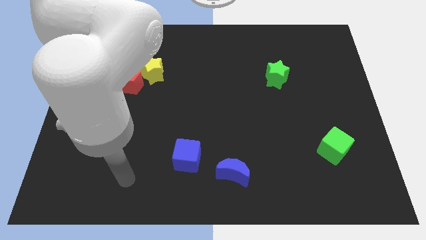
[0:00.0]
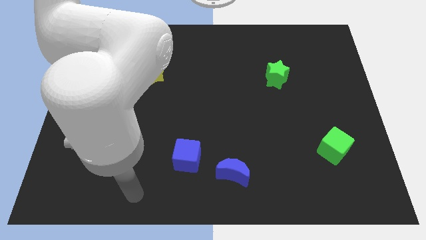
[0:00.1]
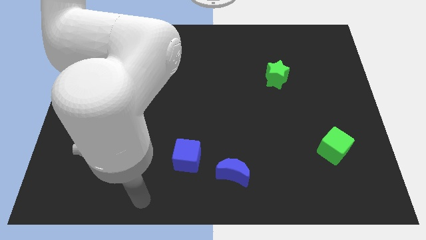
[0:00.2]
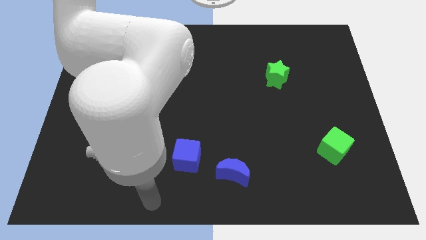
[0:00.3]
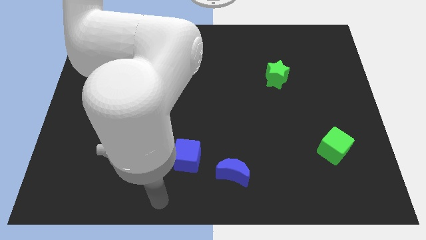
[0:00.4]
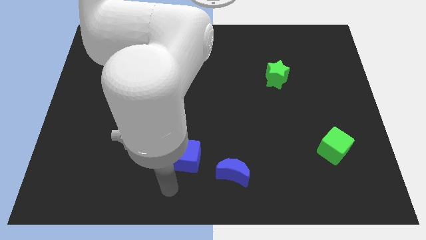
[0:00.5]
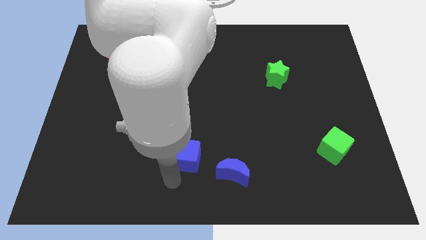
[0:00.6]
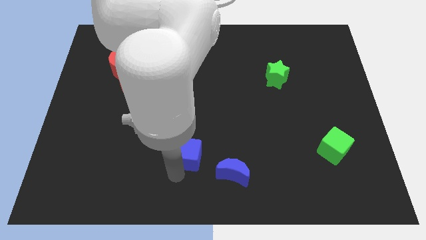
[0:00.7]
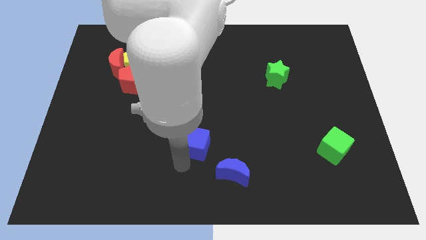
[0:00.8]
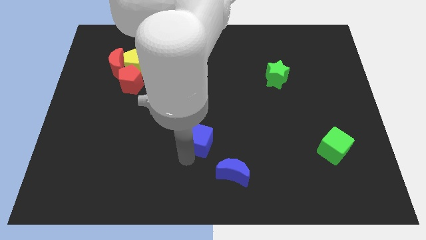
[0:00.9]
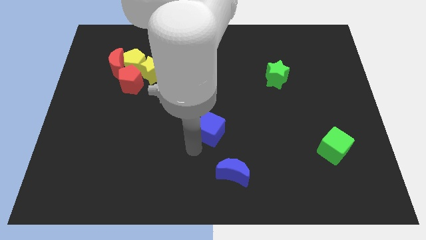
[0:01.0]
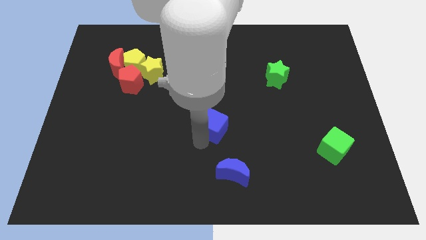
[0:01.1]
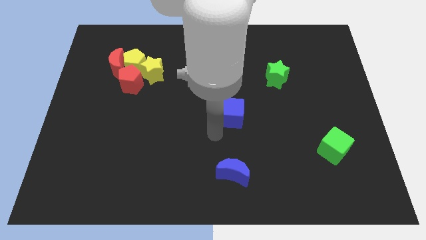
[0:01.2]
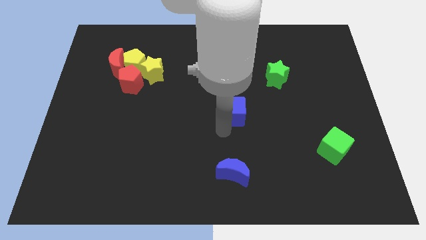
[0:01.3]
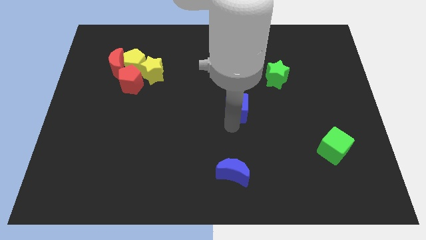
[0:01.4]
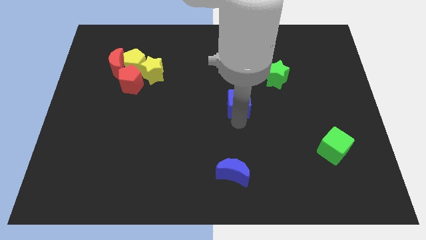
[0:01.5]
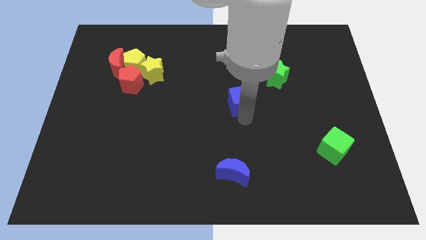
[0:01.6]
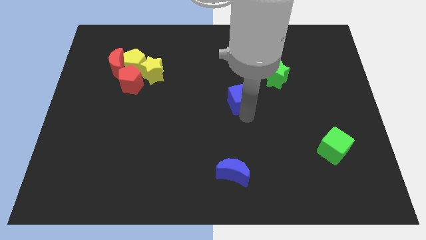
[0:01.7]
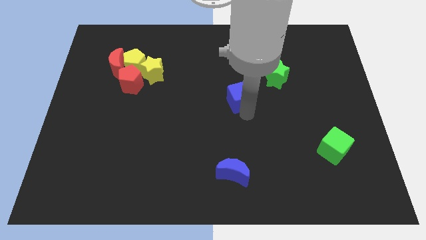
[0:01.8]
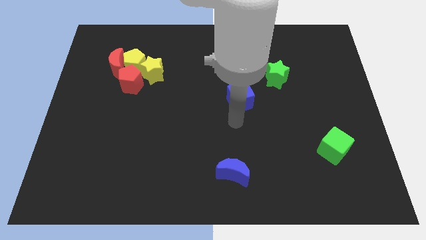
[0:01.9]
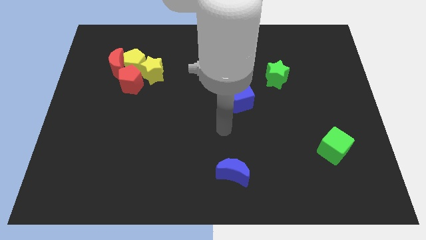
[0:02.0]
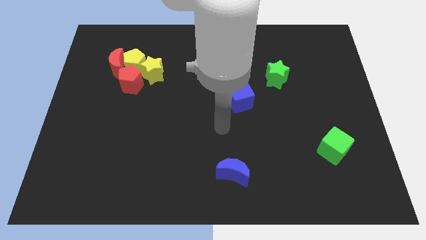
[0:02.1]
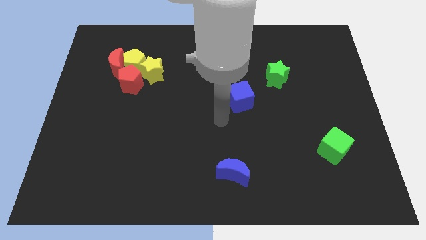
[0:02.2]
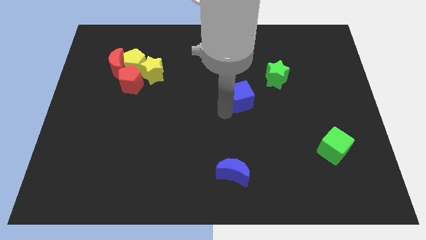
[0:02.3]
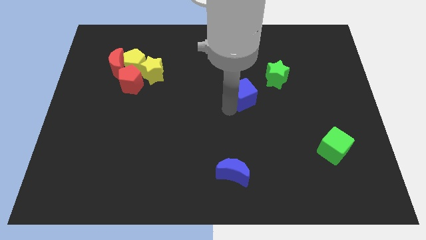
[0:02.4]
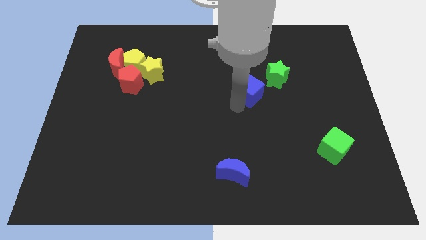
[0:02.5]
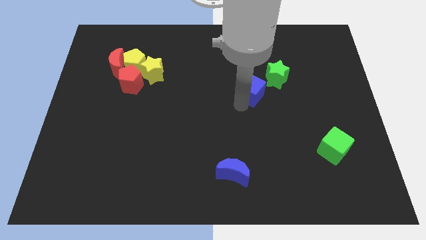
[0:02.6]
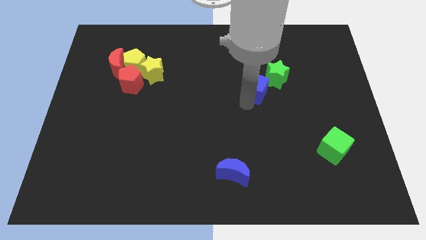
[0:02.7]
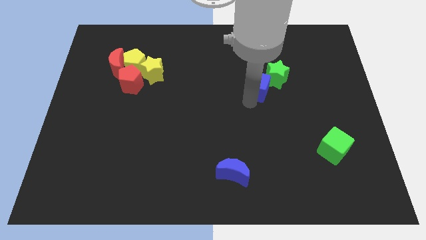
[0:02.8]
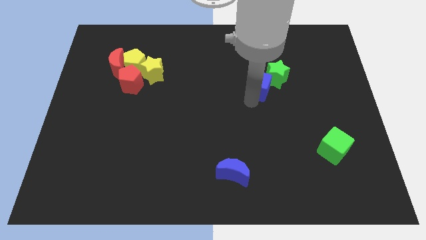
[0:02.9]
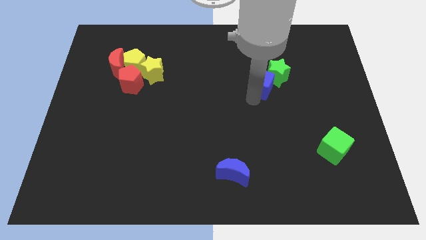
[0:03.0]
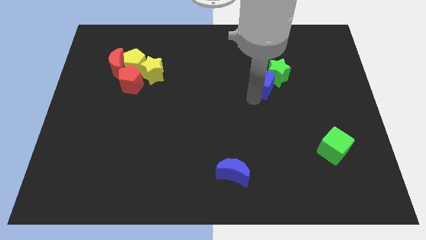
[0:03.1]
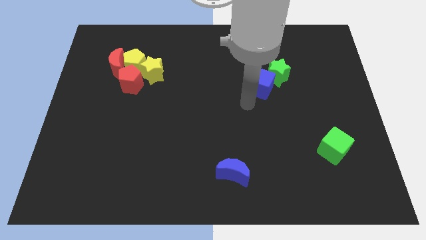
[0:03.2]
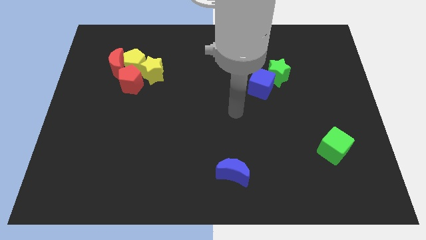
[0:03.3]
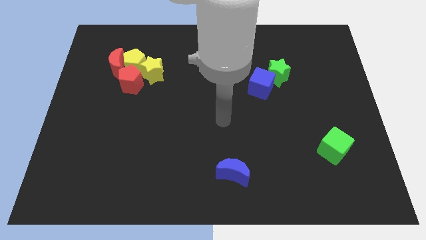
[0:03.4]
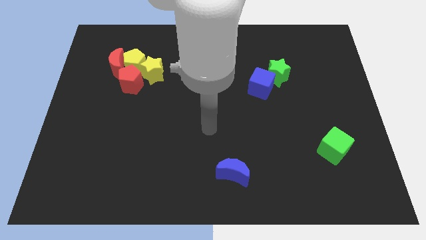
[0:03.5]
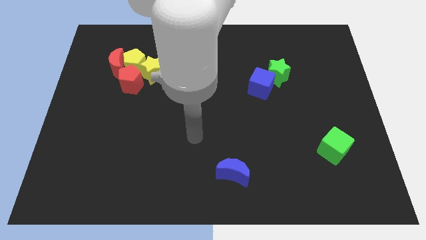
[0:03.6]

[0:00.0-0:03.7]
push the blue cube into green star

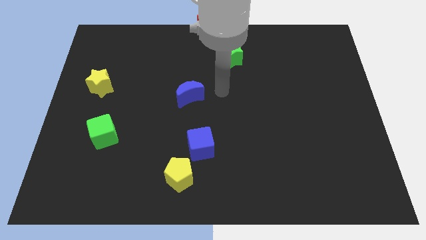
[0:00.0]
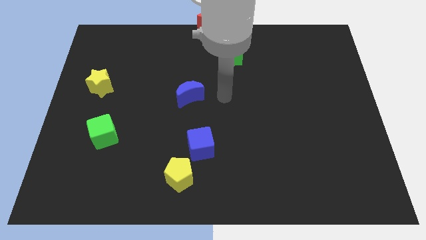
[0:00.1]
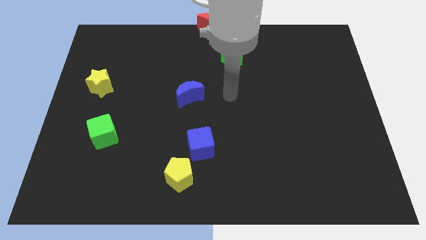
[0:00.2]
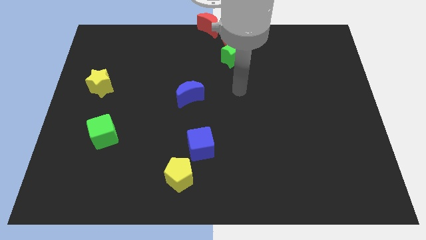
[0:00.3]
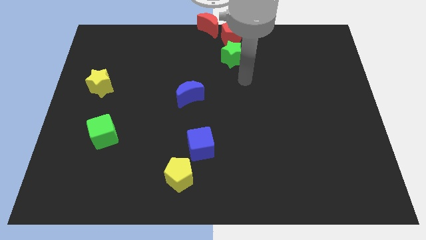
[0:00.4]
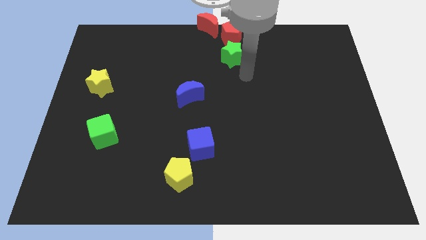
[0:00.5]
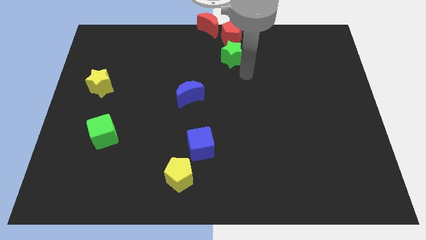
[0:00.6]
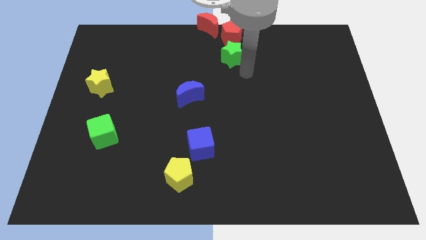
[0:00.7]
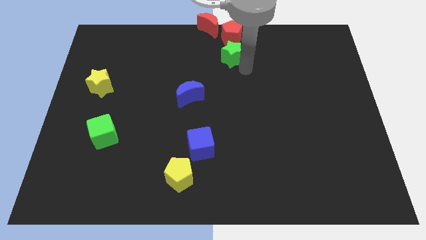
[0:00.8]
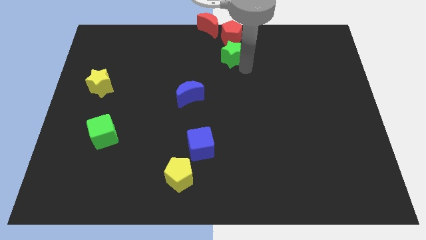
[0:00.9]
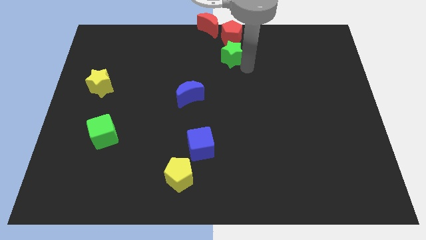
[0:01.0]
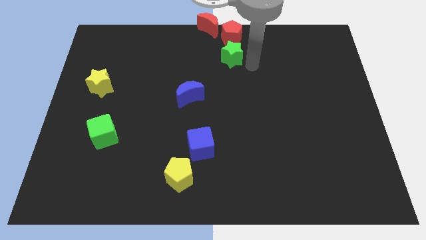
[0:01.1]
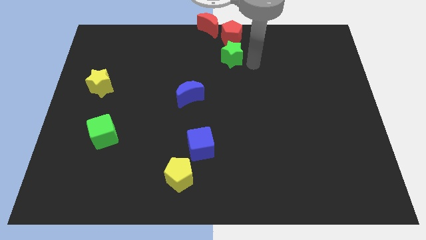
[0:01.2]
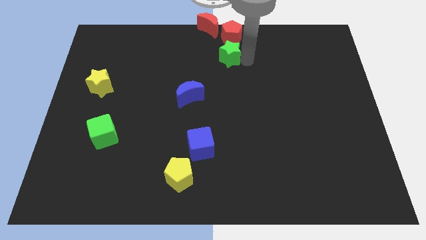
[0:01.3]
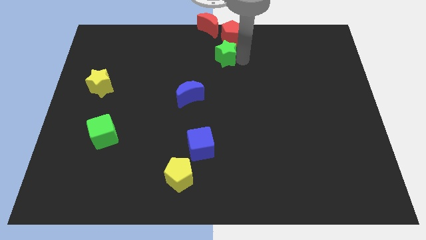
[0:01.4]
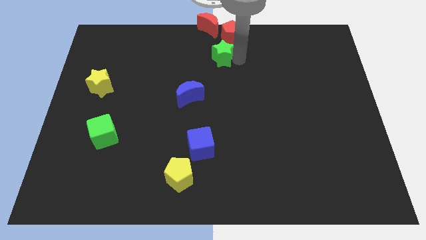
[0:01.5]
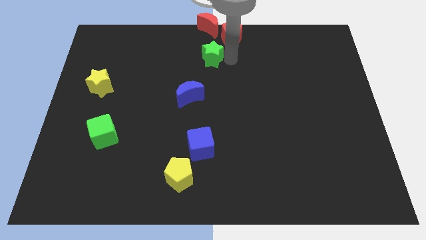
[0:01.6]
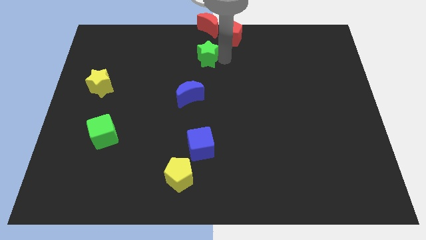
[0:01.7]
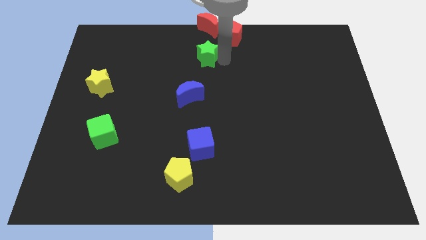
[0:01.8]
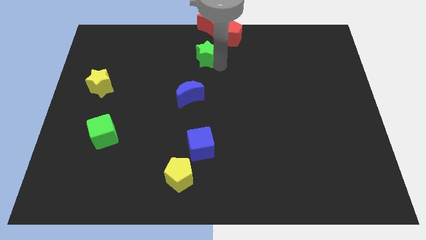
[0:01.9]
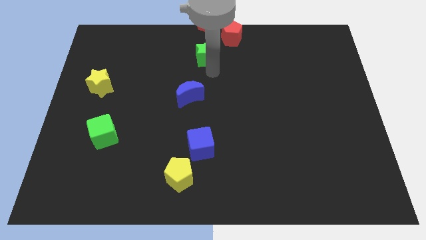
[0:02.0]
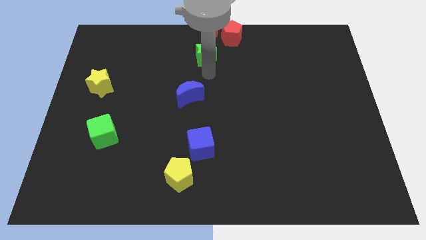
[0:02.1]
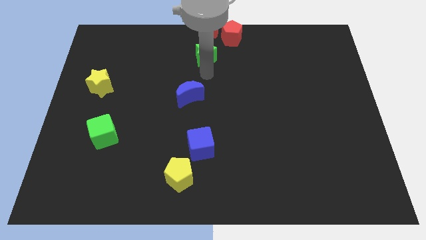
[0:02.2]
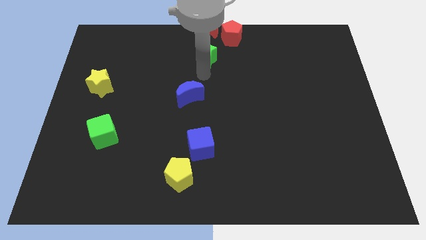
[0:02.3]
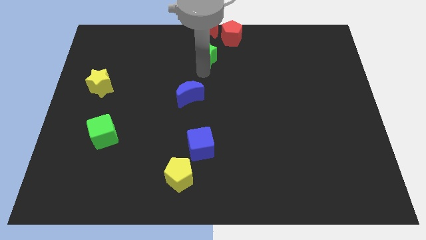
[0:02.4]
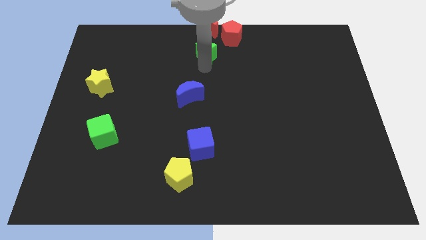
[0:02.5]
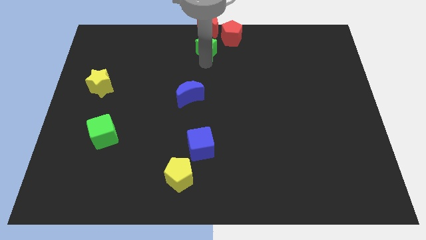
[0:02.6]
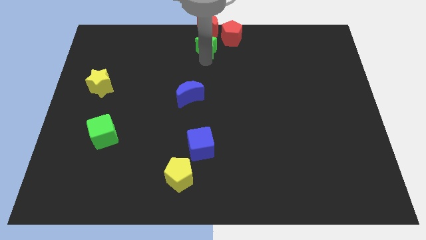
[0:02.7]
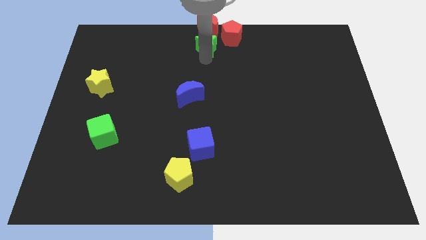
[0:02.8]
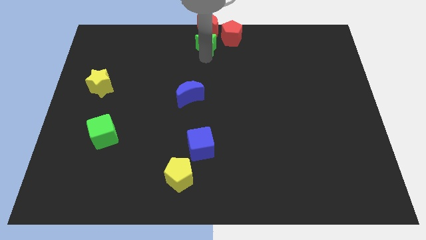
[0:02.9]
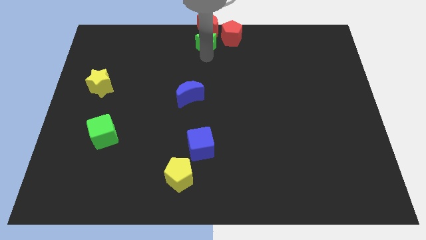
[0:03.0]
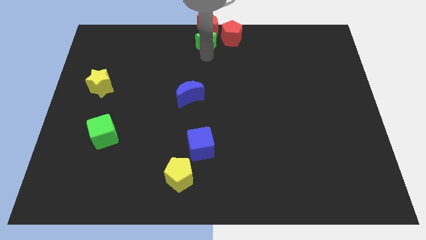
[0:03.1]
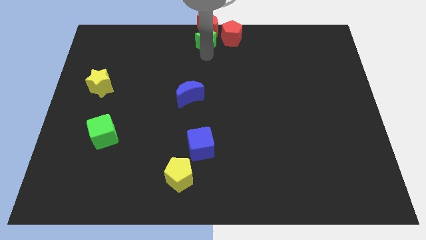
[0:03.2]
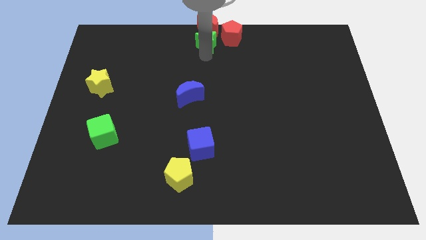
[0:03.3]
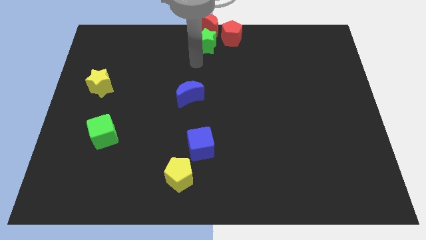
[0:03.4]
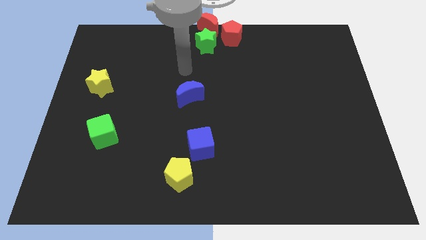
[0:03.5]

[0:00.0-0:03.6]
push the green star under to the red crescent

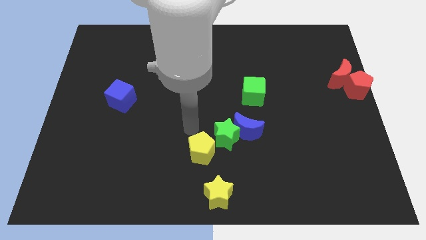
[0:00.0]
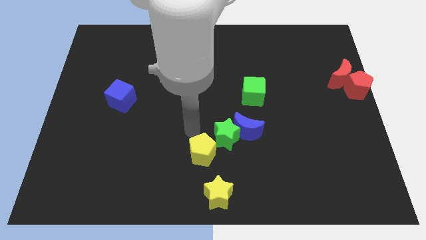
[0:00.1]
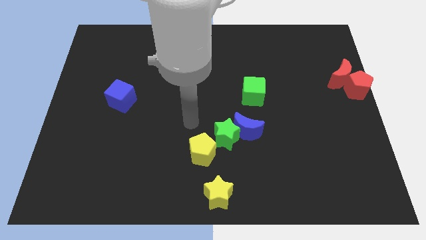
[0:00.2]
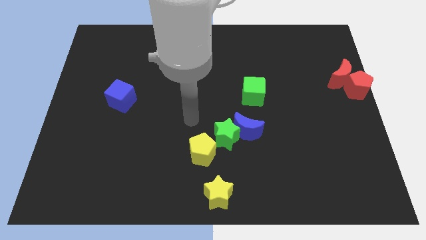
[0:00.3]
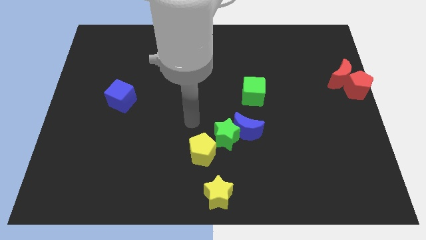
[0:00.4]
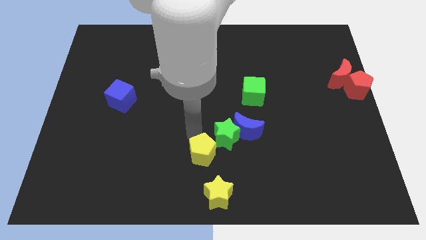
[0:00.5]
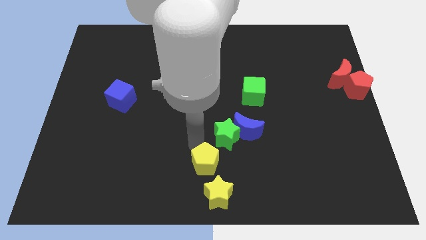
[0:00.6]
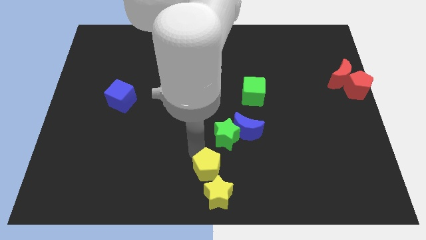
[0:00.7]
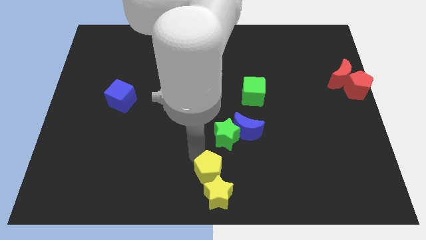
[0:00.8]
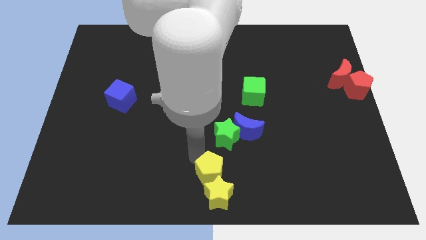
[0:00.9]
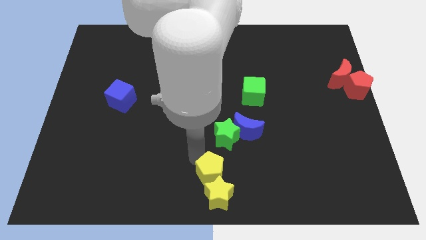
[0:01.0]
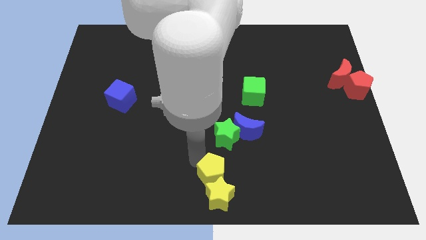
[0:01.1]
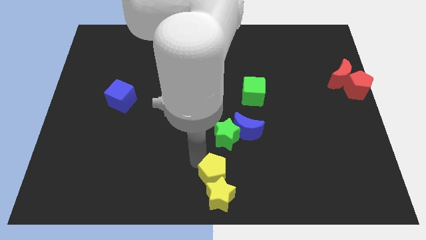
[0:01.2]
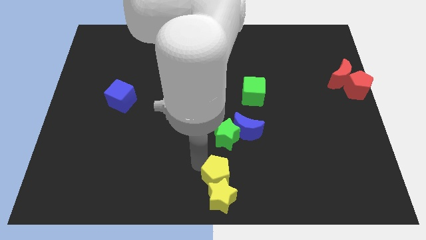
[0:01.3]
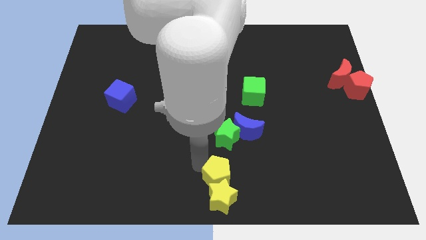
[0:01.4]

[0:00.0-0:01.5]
move the yellow pentagon to the top of the yellow star

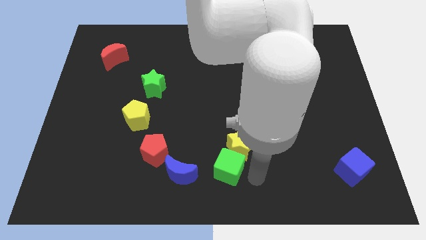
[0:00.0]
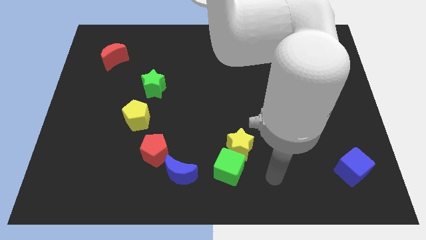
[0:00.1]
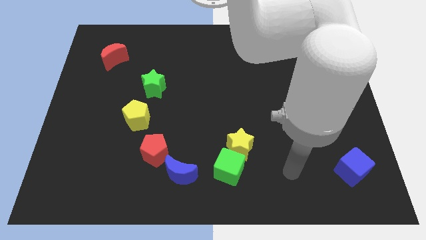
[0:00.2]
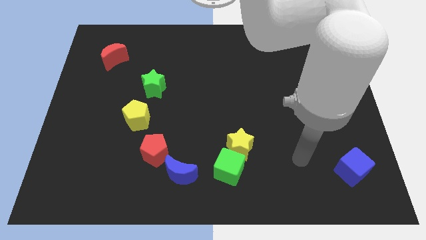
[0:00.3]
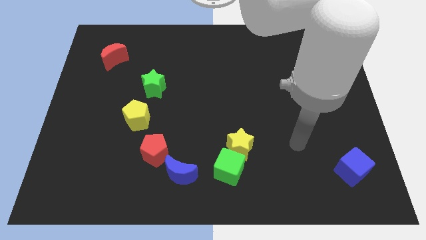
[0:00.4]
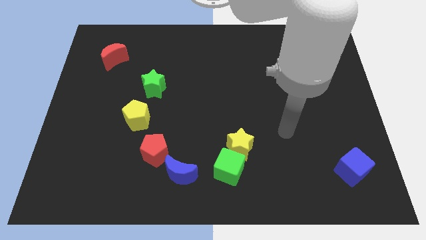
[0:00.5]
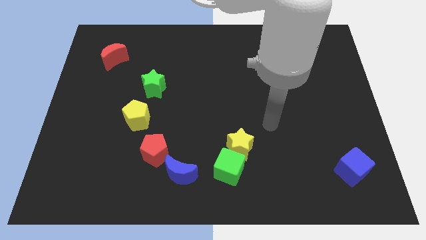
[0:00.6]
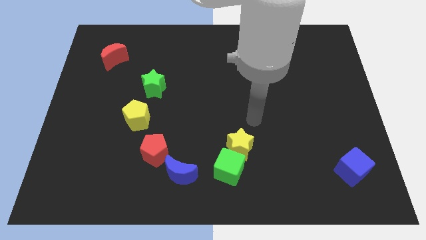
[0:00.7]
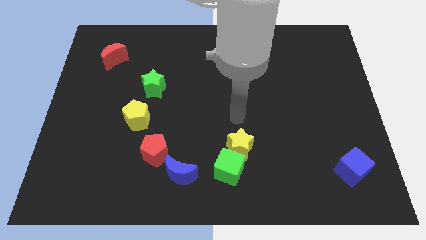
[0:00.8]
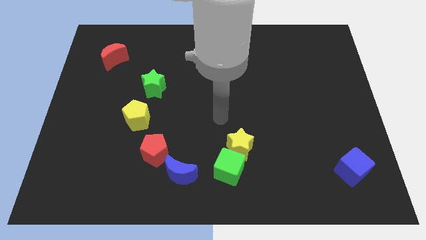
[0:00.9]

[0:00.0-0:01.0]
place your arm at the center of the board
